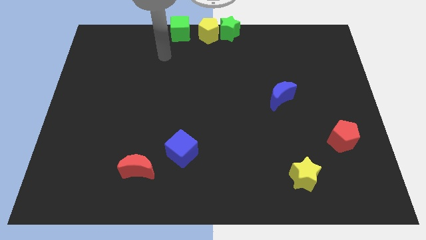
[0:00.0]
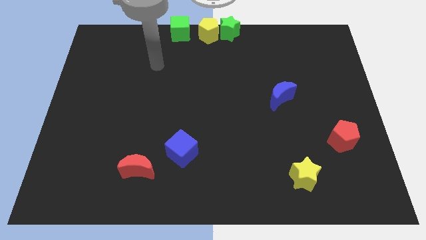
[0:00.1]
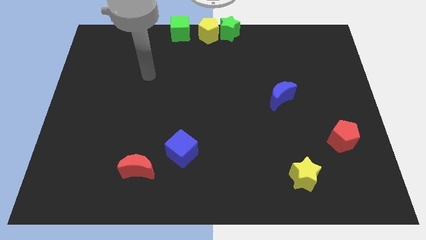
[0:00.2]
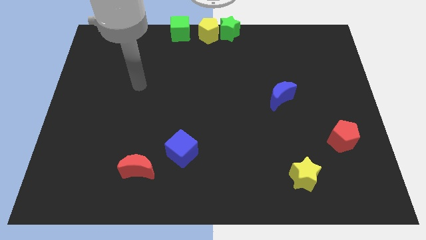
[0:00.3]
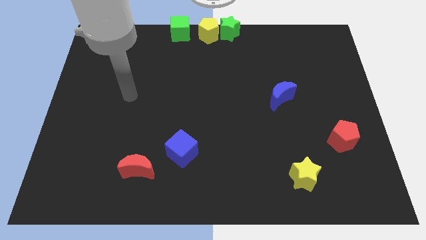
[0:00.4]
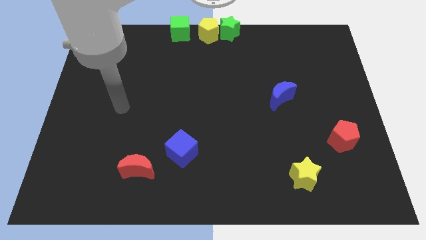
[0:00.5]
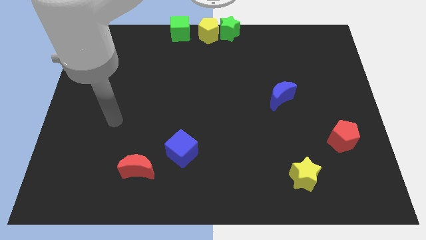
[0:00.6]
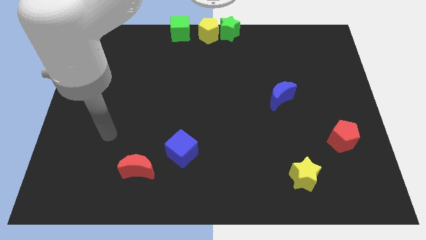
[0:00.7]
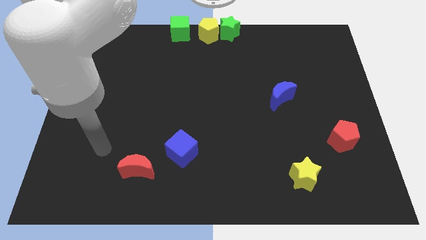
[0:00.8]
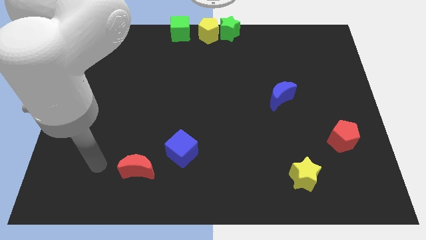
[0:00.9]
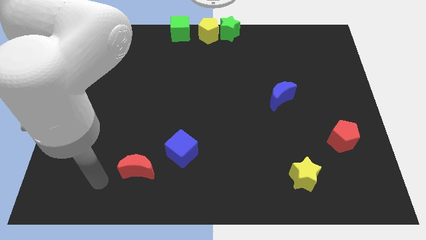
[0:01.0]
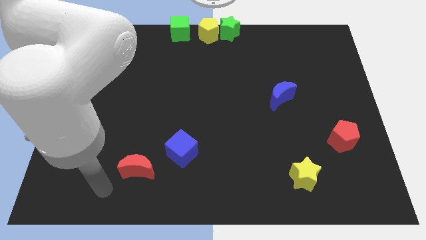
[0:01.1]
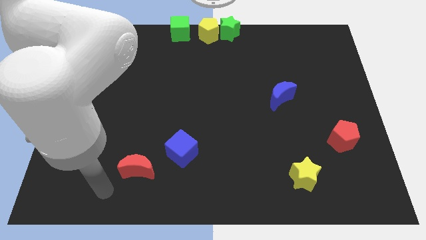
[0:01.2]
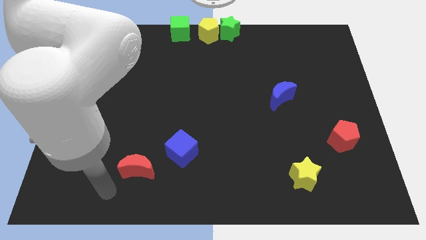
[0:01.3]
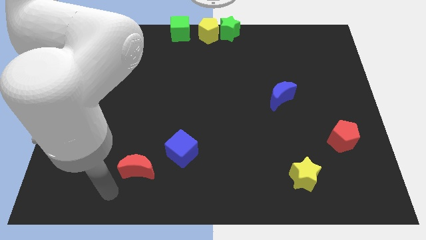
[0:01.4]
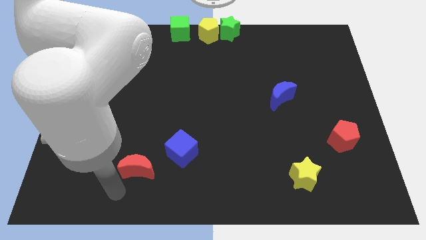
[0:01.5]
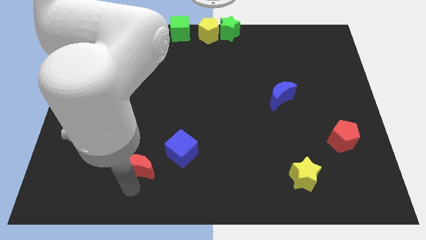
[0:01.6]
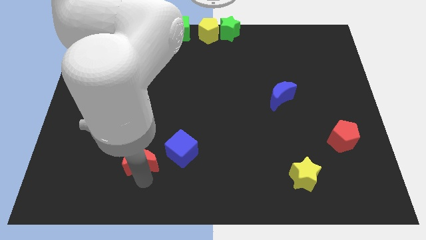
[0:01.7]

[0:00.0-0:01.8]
tap the red crescent

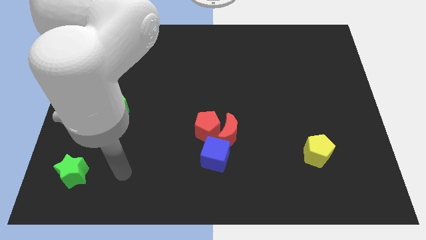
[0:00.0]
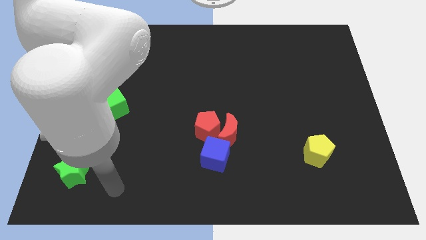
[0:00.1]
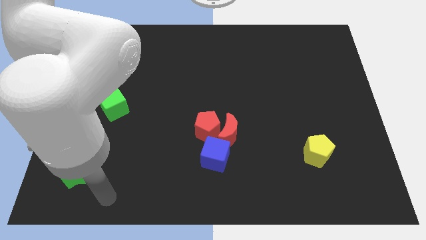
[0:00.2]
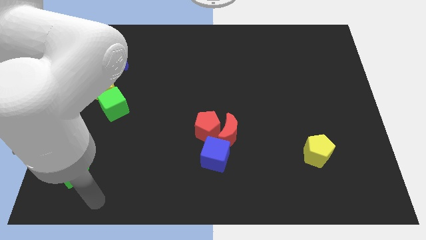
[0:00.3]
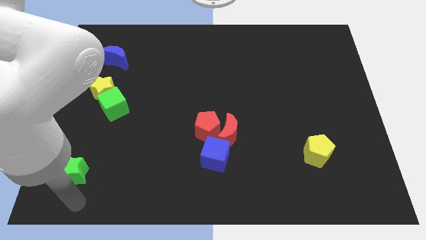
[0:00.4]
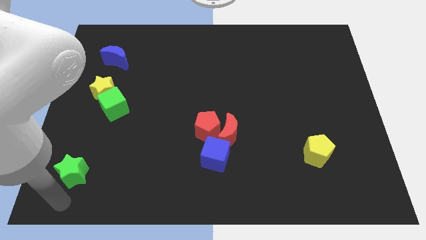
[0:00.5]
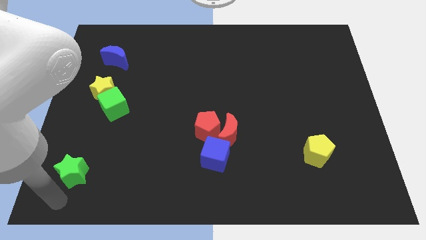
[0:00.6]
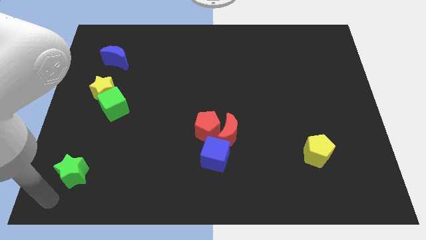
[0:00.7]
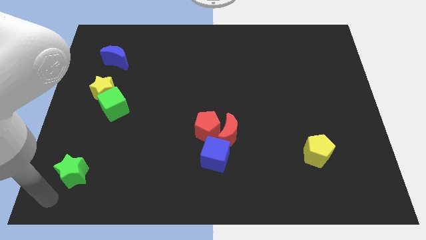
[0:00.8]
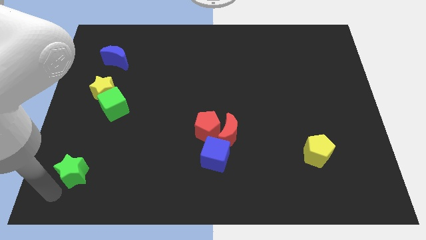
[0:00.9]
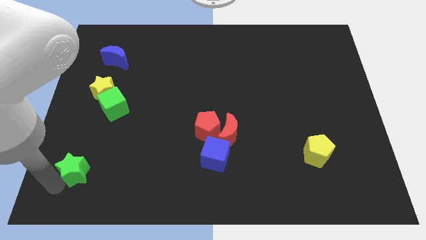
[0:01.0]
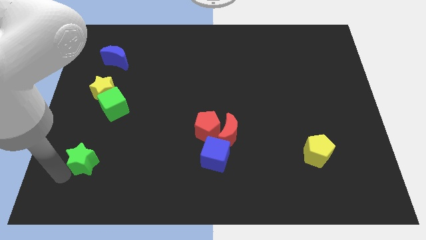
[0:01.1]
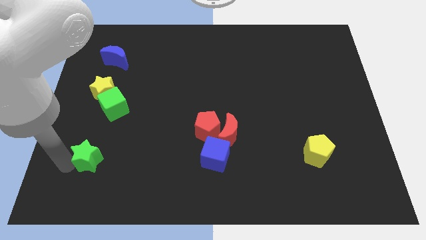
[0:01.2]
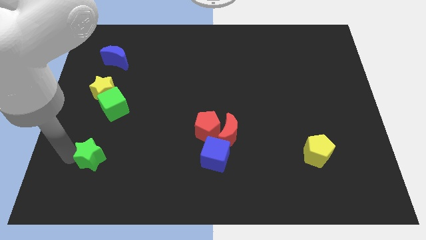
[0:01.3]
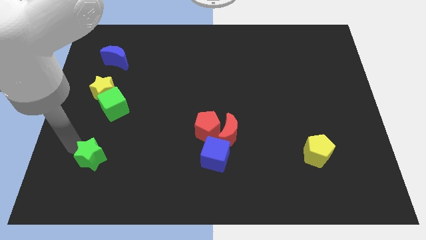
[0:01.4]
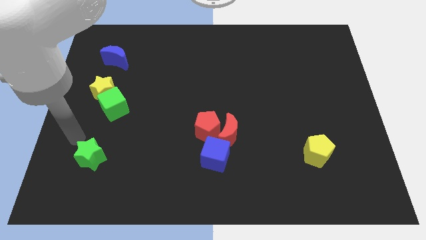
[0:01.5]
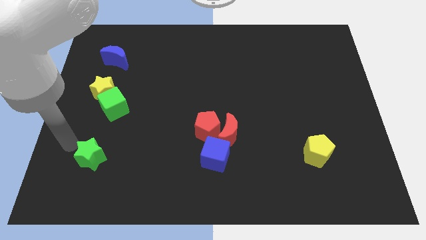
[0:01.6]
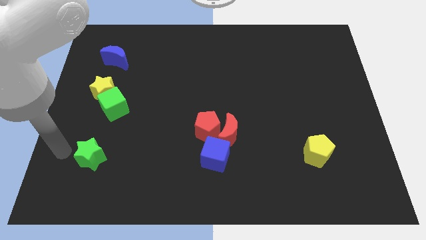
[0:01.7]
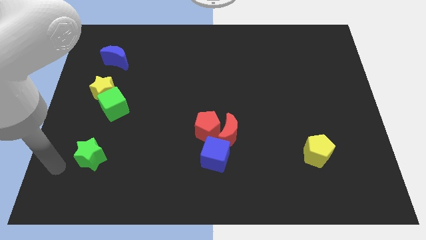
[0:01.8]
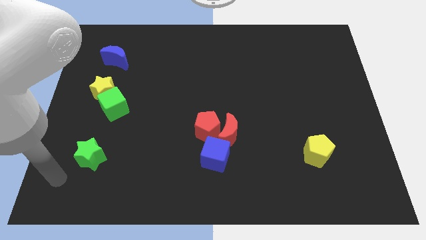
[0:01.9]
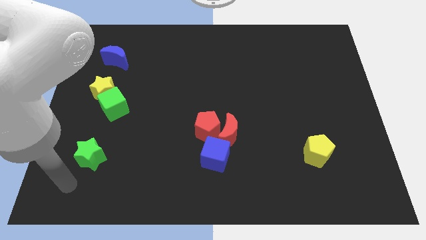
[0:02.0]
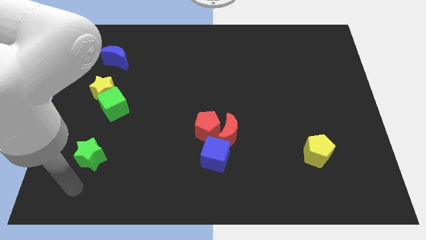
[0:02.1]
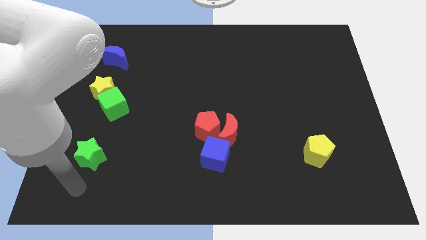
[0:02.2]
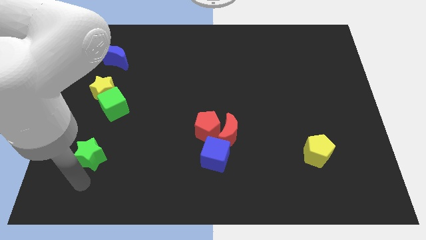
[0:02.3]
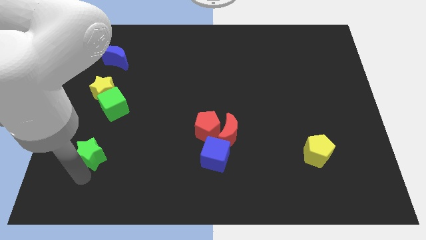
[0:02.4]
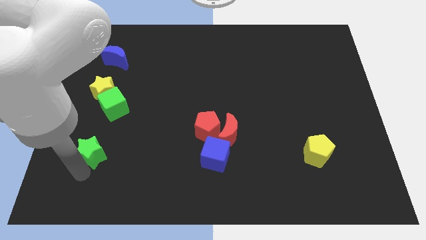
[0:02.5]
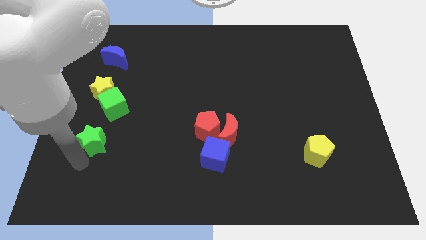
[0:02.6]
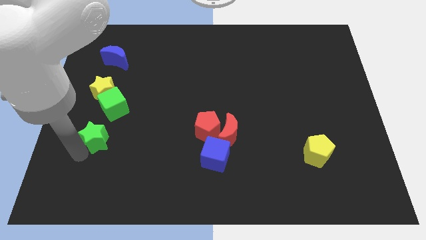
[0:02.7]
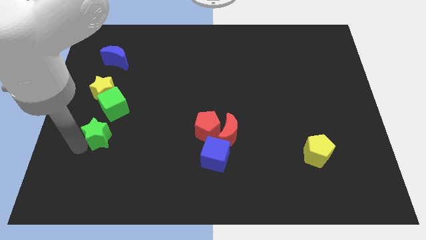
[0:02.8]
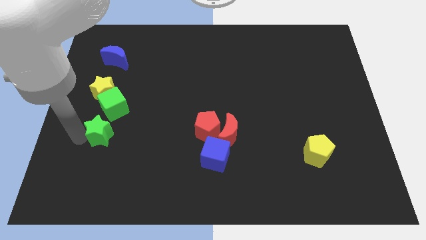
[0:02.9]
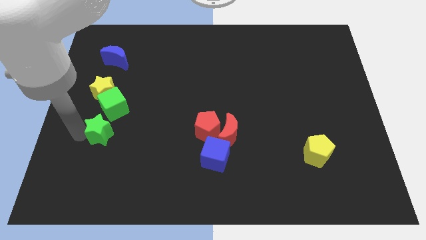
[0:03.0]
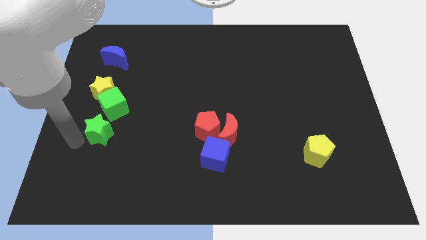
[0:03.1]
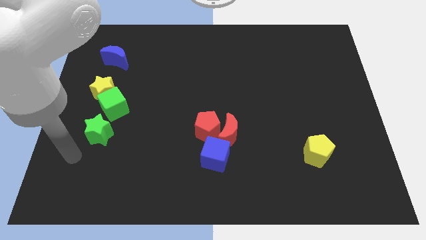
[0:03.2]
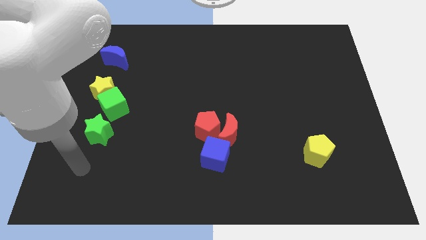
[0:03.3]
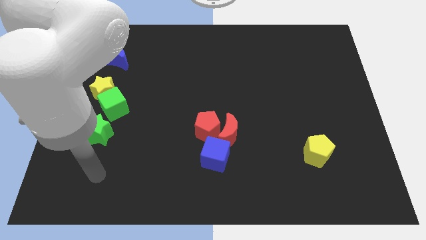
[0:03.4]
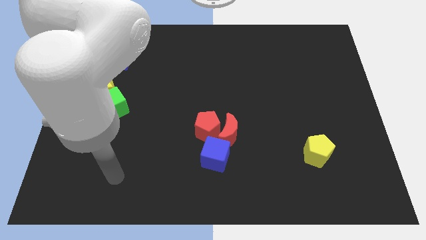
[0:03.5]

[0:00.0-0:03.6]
move the green star towards up

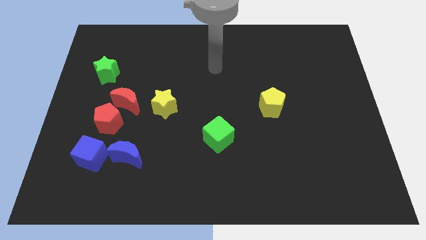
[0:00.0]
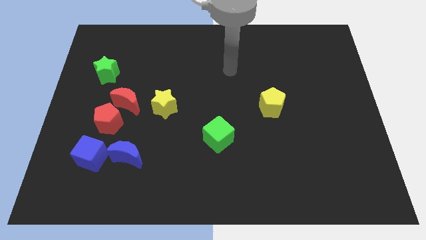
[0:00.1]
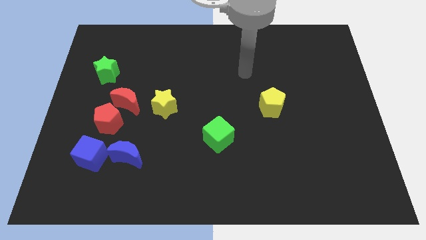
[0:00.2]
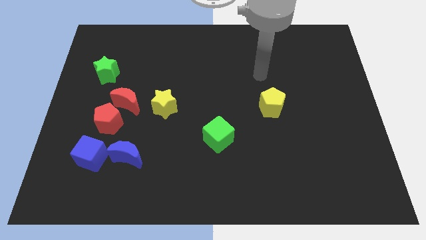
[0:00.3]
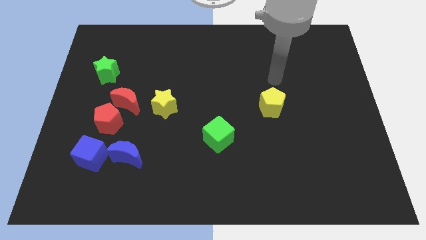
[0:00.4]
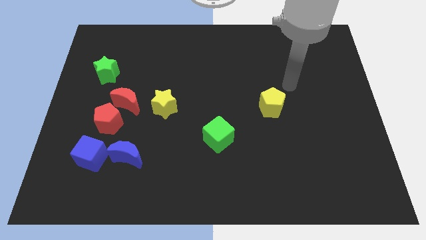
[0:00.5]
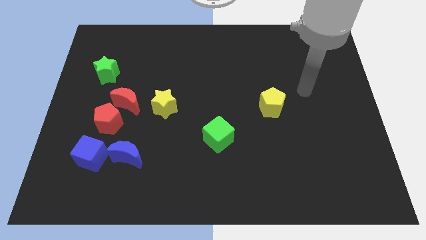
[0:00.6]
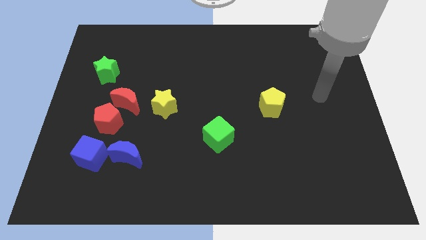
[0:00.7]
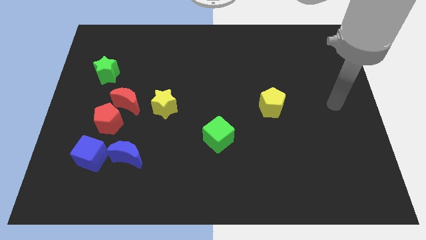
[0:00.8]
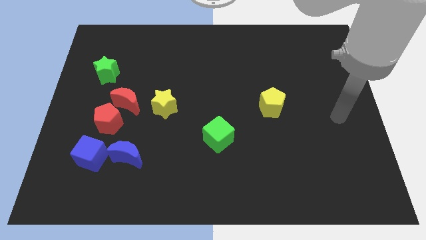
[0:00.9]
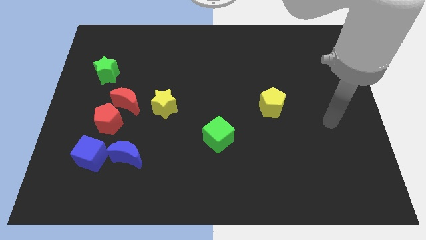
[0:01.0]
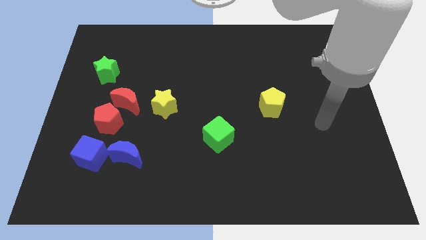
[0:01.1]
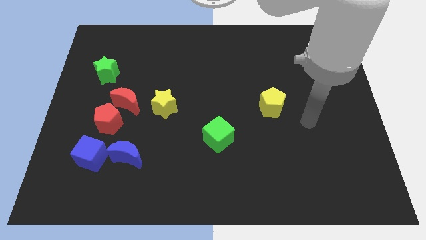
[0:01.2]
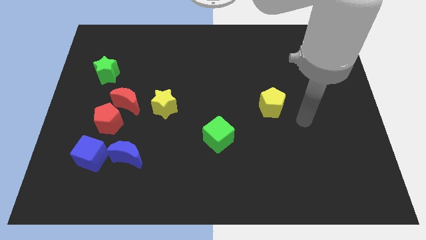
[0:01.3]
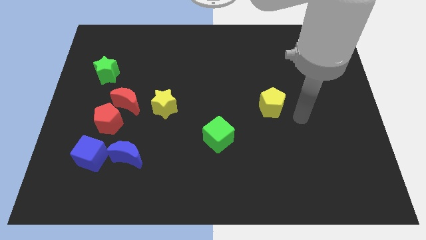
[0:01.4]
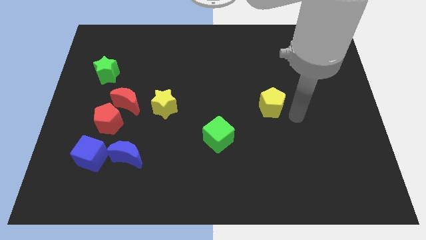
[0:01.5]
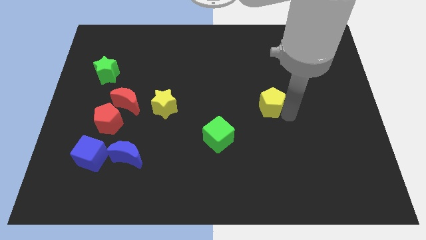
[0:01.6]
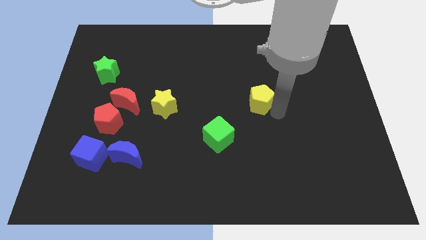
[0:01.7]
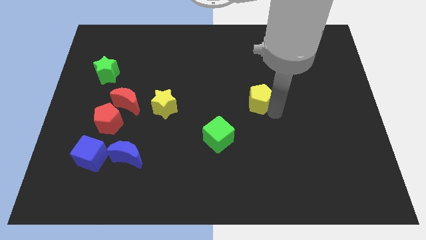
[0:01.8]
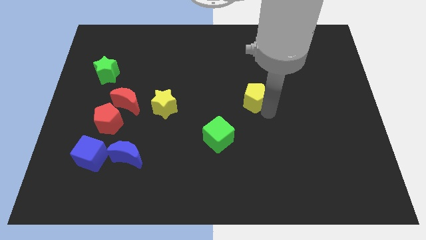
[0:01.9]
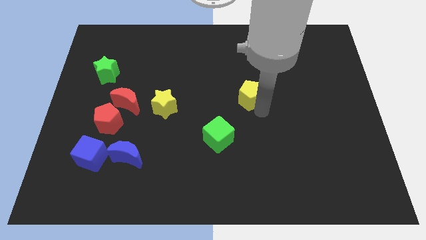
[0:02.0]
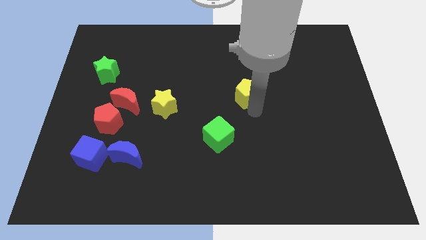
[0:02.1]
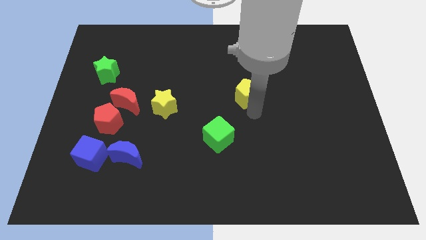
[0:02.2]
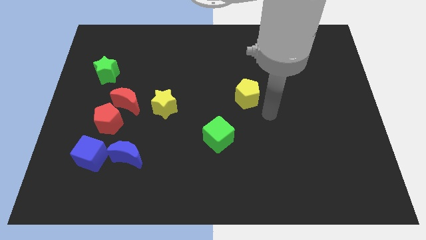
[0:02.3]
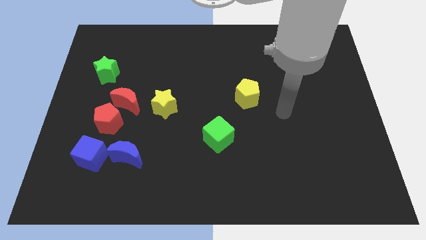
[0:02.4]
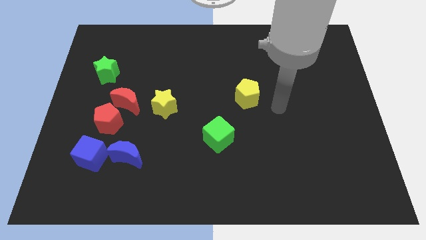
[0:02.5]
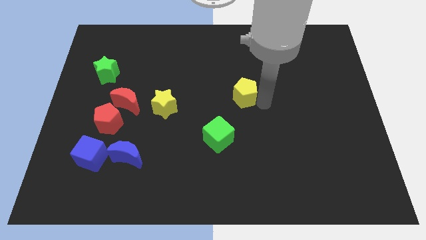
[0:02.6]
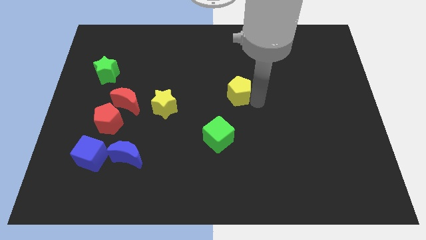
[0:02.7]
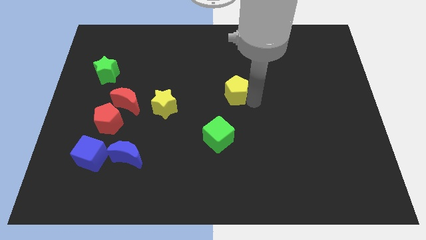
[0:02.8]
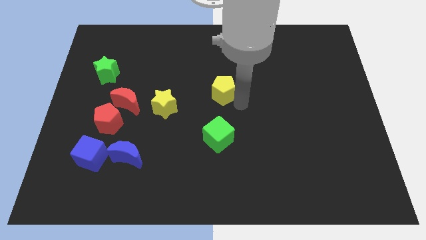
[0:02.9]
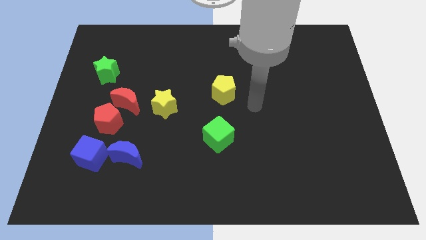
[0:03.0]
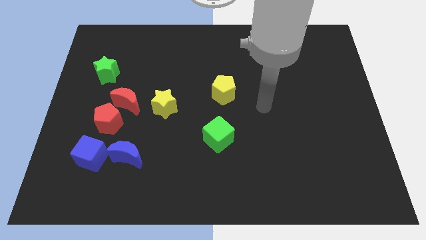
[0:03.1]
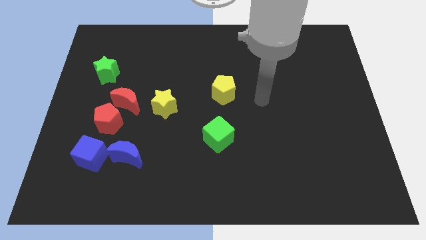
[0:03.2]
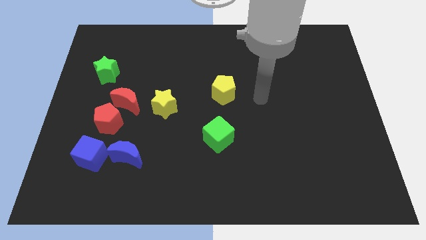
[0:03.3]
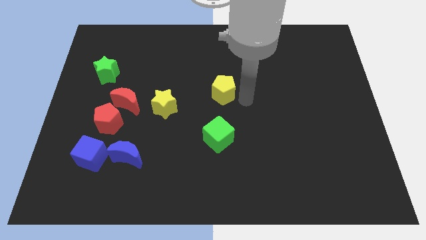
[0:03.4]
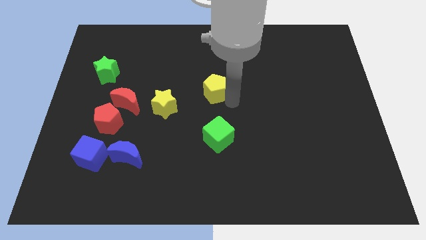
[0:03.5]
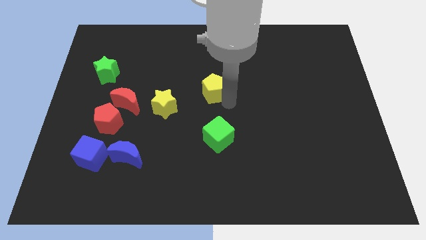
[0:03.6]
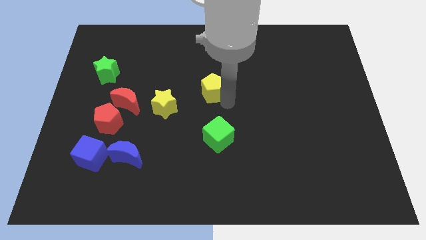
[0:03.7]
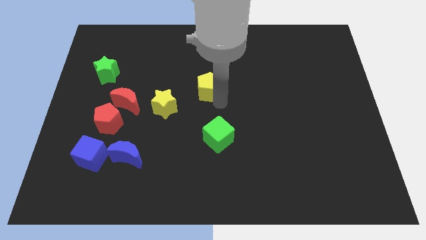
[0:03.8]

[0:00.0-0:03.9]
move the yellow pentagon to the top of the green star
